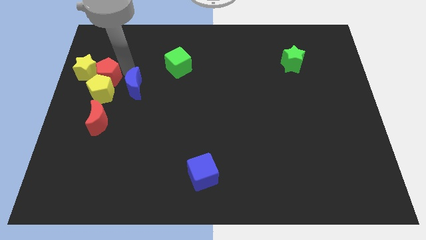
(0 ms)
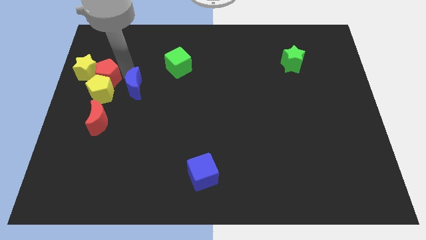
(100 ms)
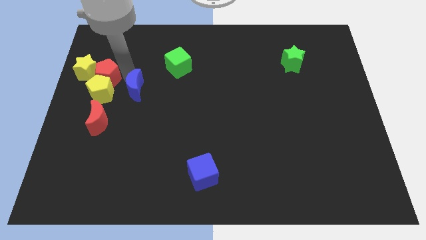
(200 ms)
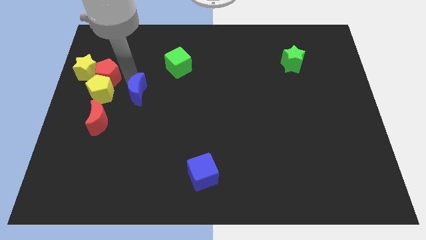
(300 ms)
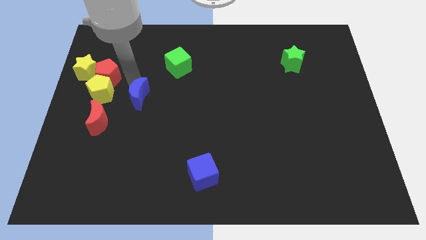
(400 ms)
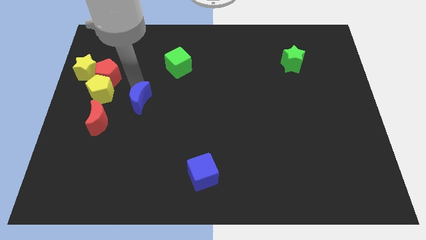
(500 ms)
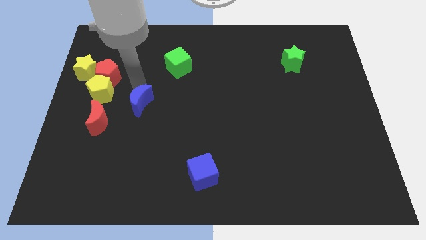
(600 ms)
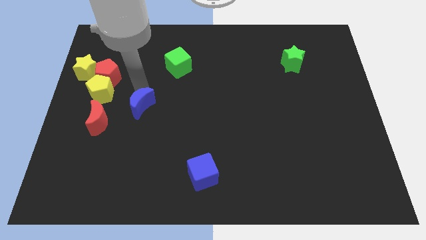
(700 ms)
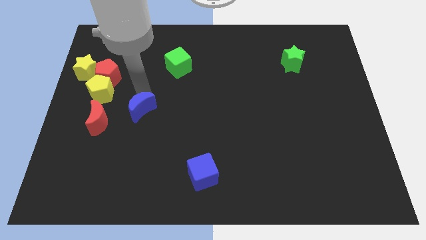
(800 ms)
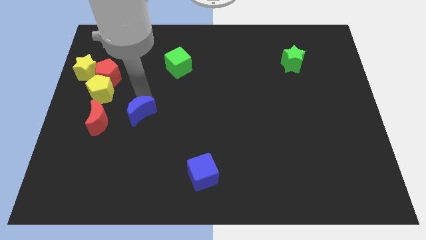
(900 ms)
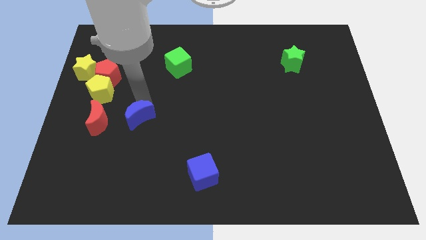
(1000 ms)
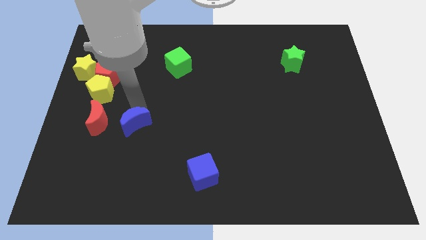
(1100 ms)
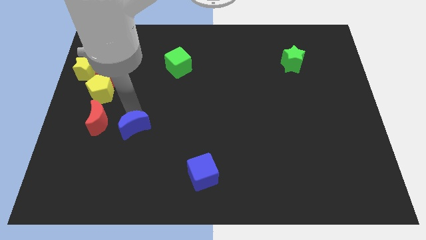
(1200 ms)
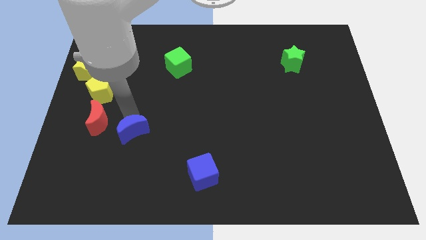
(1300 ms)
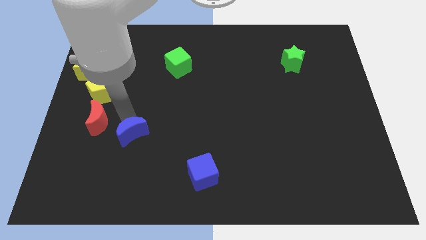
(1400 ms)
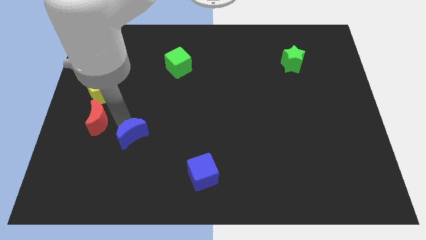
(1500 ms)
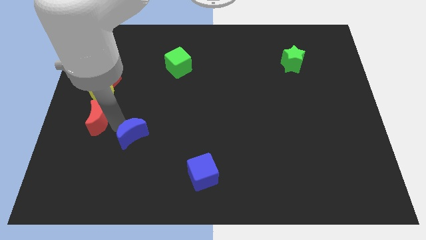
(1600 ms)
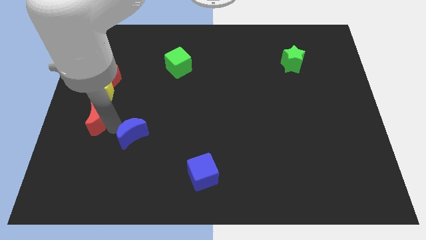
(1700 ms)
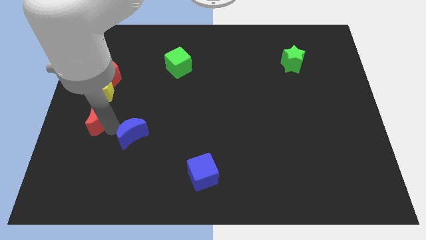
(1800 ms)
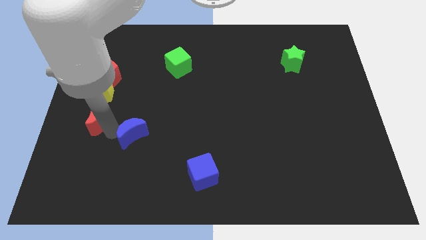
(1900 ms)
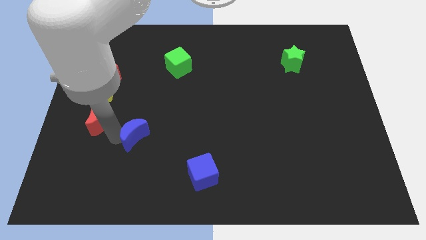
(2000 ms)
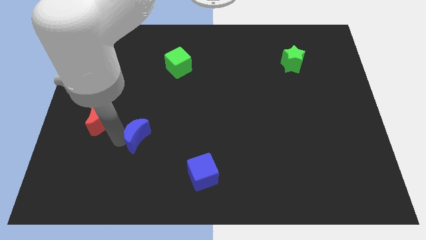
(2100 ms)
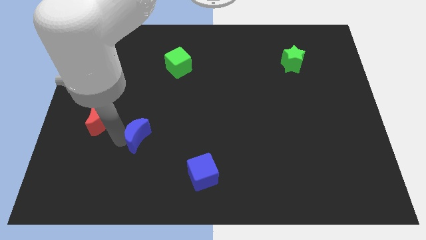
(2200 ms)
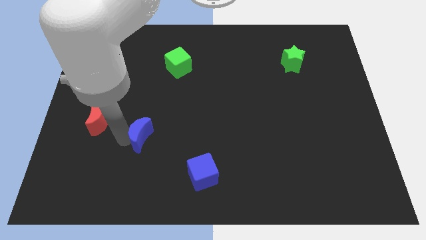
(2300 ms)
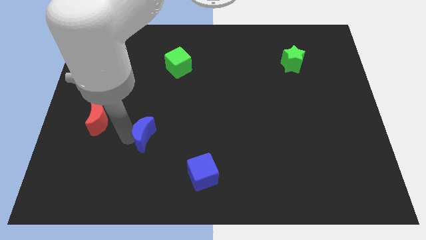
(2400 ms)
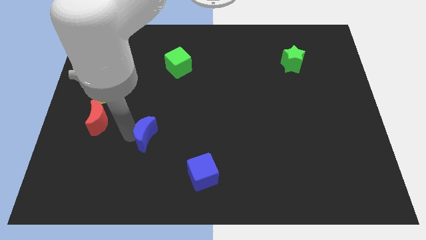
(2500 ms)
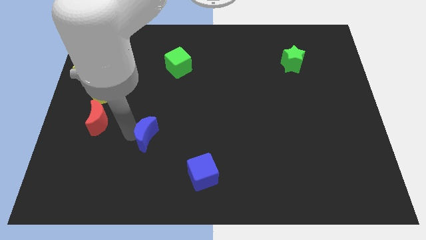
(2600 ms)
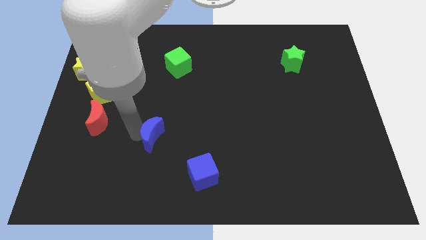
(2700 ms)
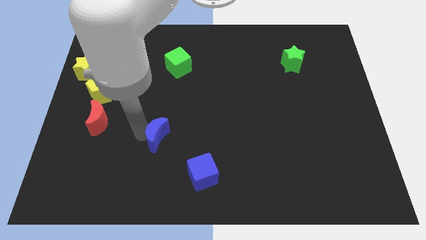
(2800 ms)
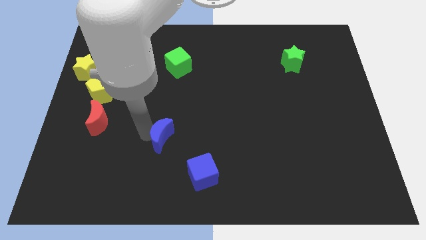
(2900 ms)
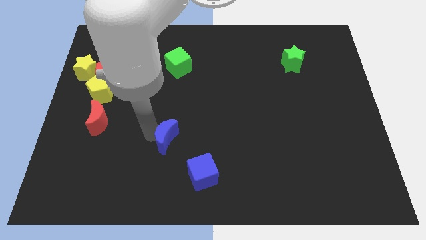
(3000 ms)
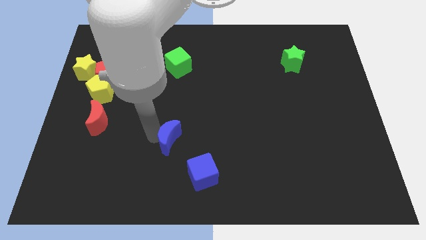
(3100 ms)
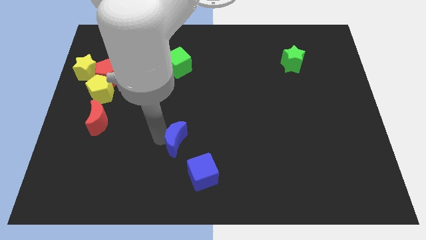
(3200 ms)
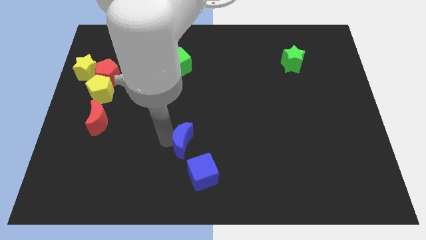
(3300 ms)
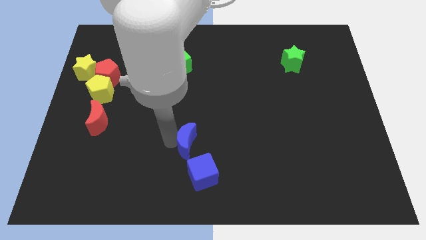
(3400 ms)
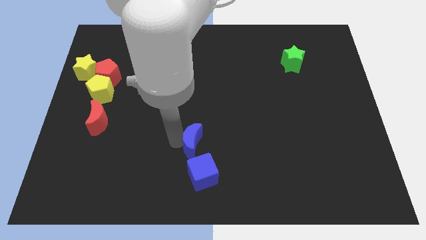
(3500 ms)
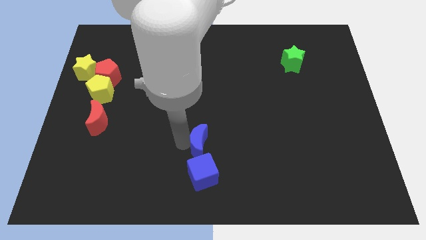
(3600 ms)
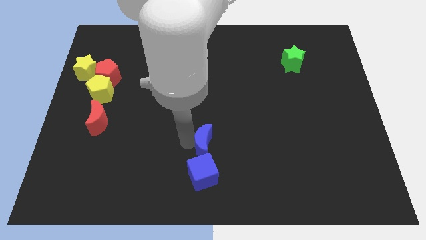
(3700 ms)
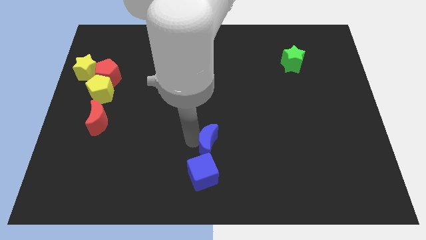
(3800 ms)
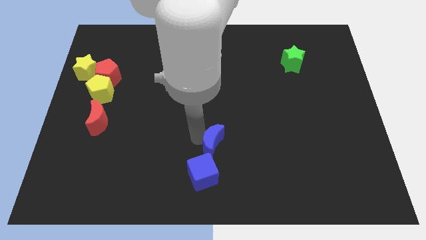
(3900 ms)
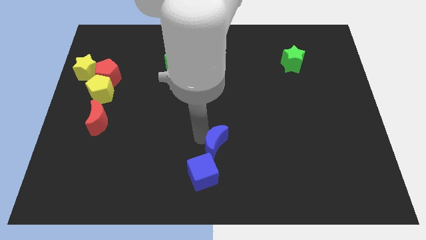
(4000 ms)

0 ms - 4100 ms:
push blue moon above the blue cube

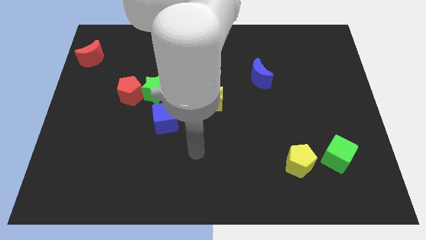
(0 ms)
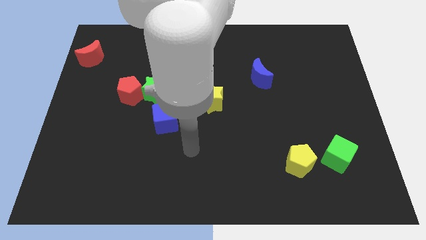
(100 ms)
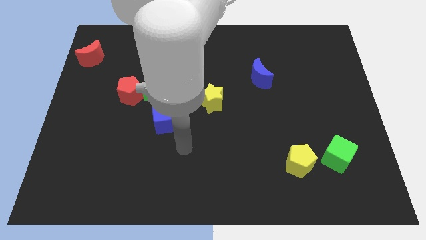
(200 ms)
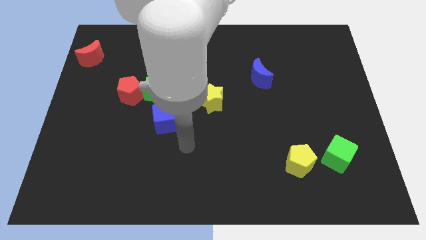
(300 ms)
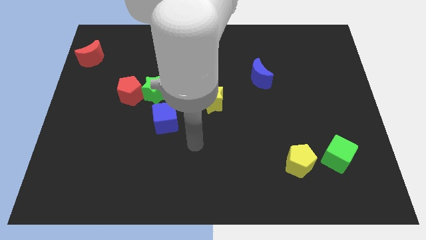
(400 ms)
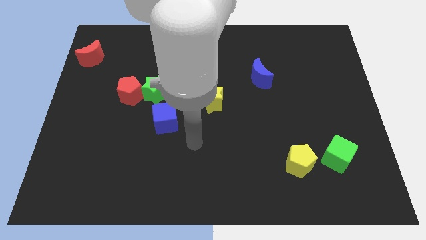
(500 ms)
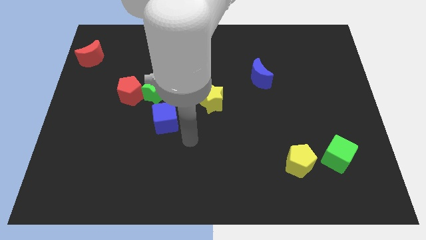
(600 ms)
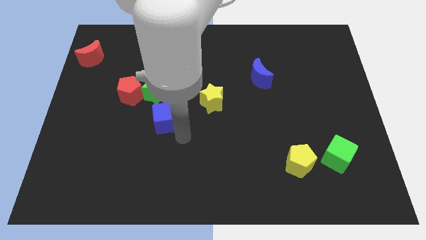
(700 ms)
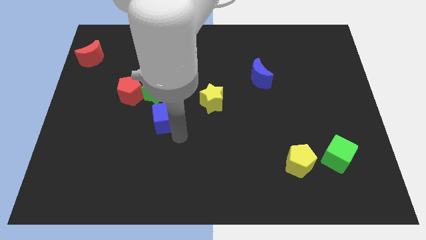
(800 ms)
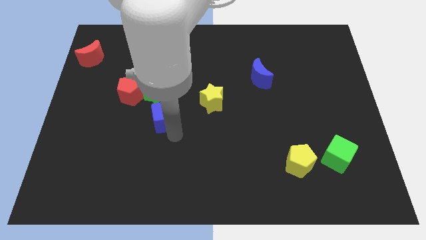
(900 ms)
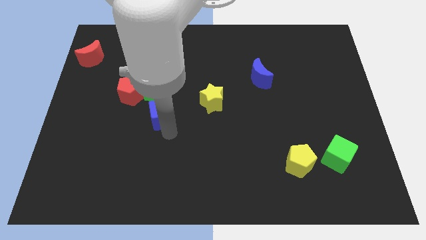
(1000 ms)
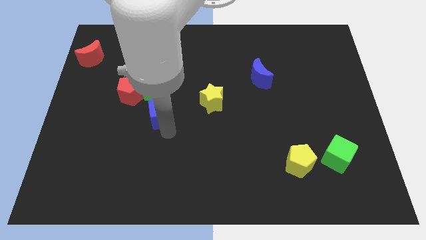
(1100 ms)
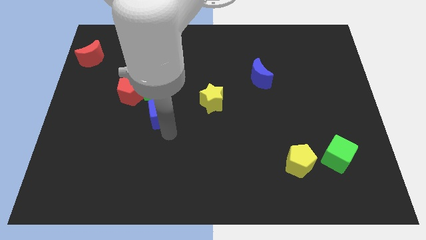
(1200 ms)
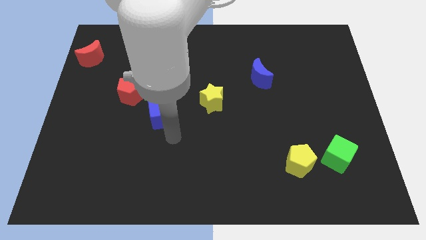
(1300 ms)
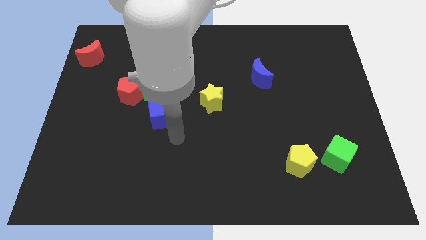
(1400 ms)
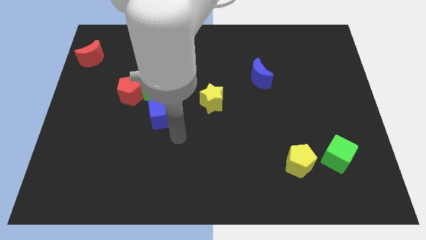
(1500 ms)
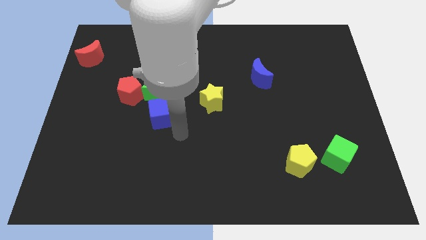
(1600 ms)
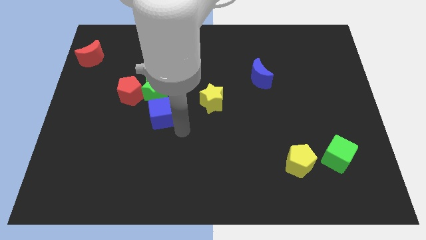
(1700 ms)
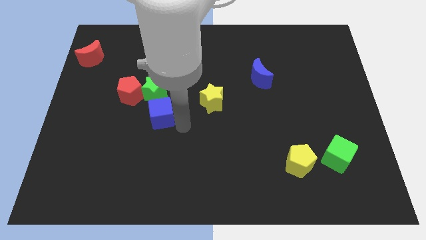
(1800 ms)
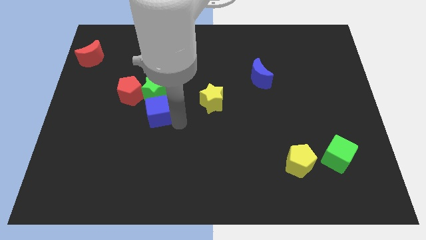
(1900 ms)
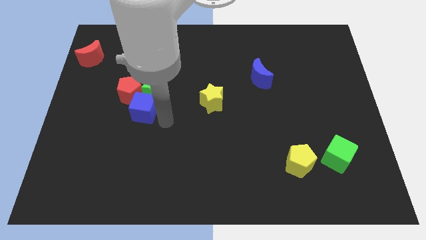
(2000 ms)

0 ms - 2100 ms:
push blue cube into red pentagon and green star

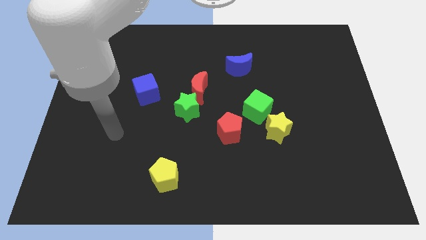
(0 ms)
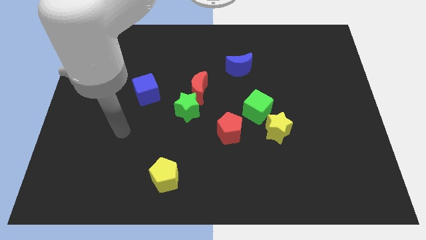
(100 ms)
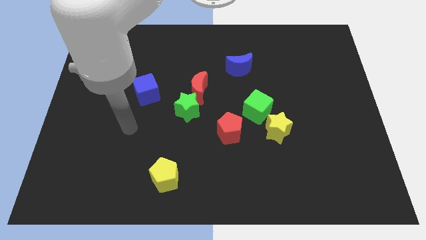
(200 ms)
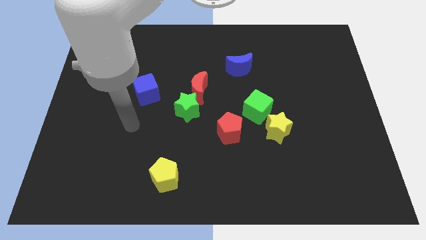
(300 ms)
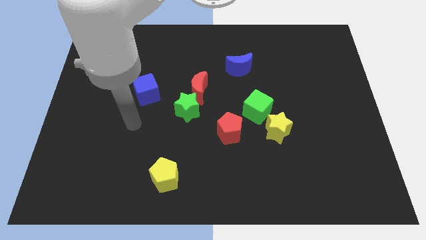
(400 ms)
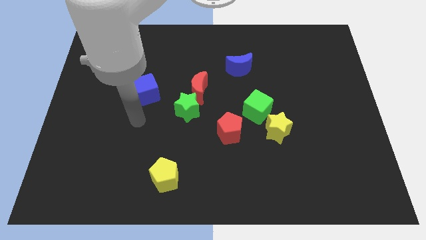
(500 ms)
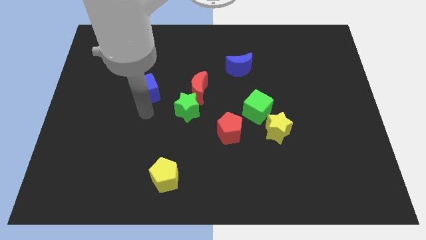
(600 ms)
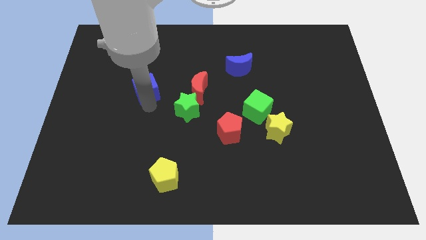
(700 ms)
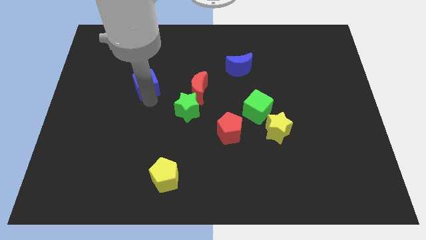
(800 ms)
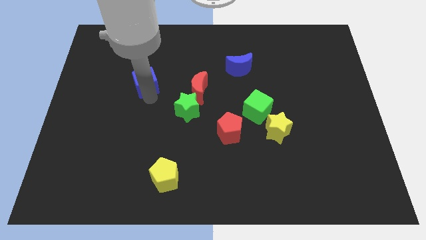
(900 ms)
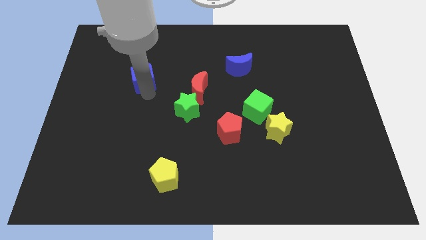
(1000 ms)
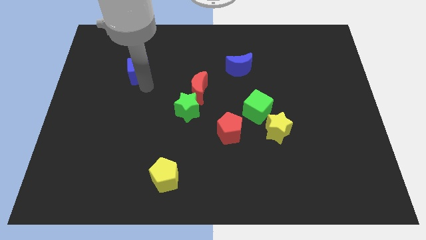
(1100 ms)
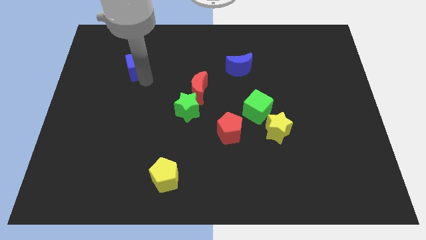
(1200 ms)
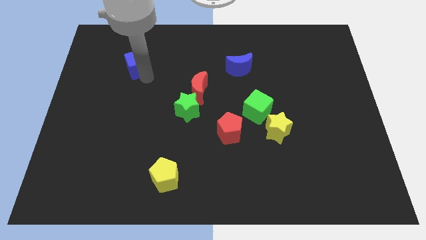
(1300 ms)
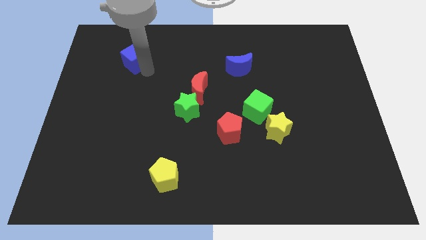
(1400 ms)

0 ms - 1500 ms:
push the blue cube slightly to the top of the board

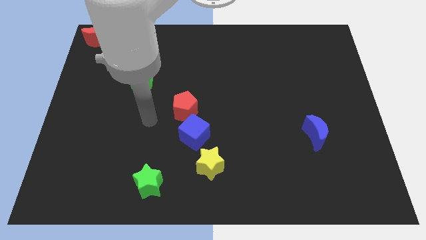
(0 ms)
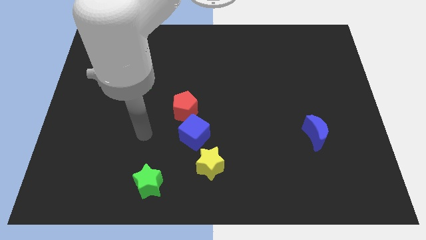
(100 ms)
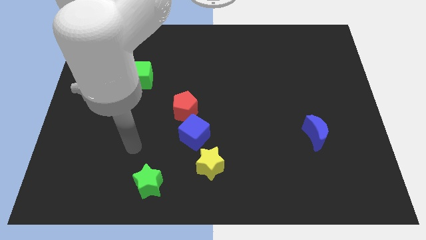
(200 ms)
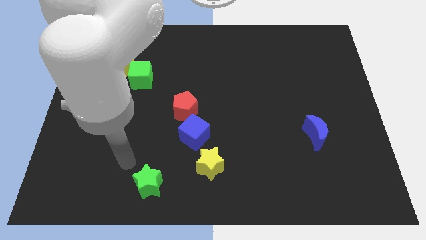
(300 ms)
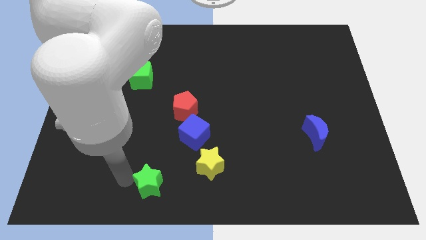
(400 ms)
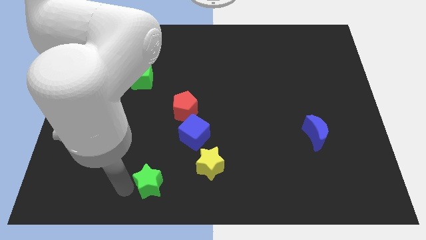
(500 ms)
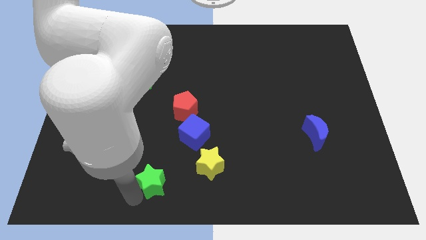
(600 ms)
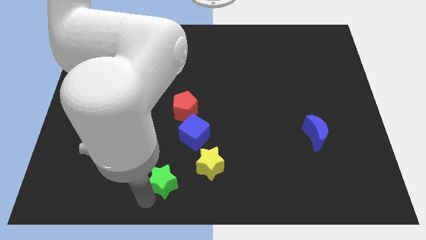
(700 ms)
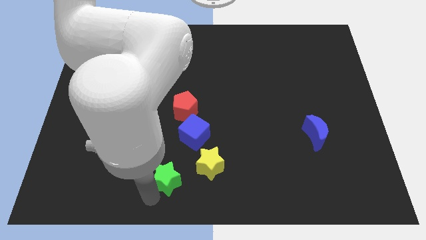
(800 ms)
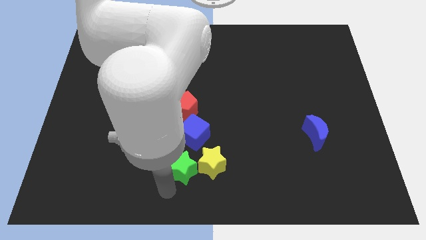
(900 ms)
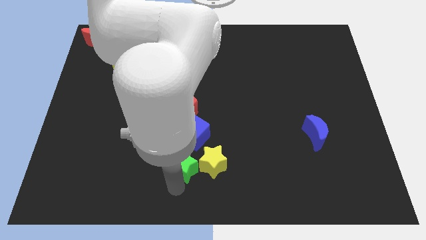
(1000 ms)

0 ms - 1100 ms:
move green star into yellow star

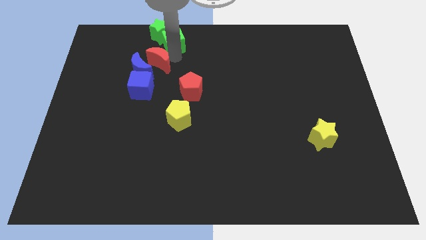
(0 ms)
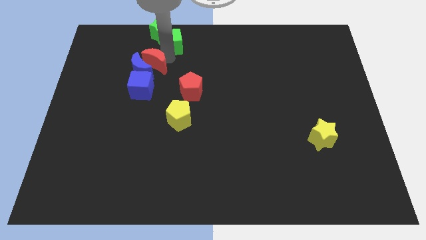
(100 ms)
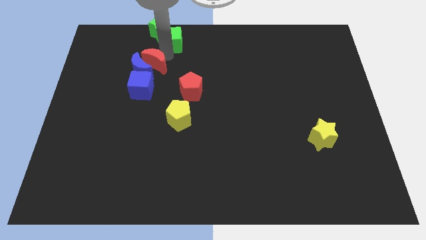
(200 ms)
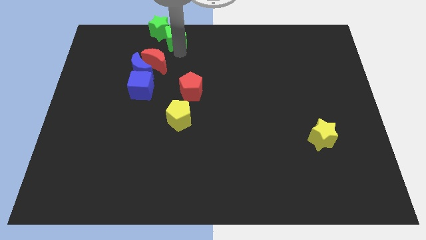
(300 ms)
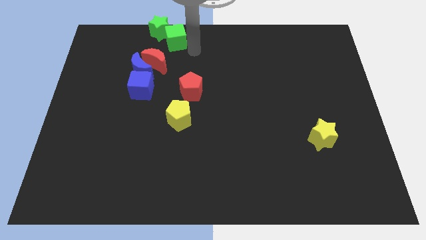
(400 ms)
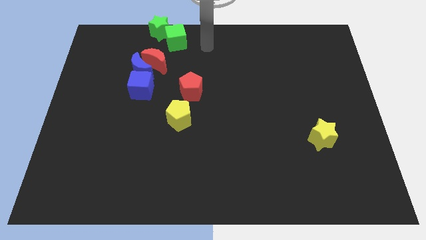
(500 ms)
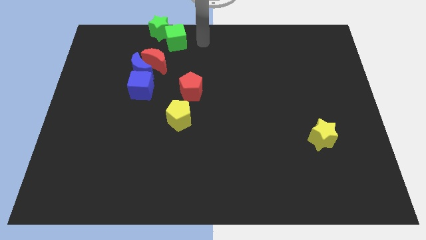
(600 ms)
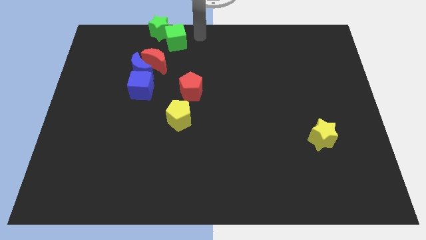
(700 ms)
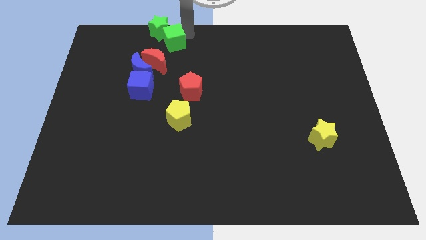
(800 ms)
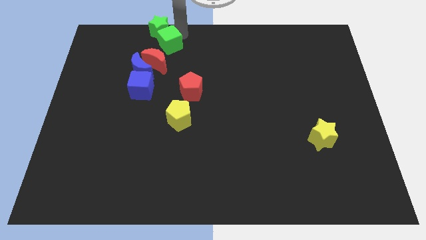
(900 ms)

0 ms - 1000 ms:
move red crescent from green cube
